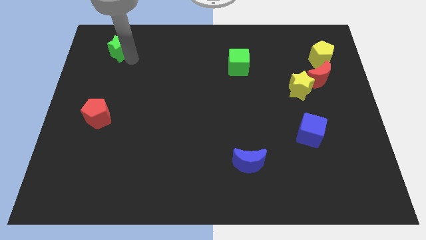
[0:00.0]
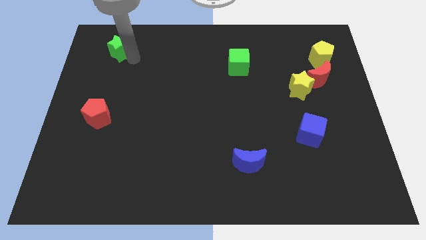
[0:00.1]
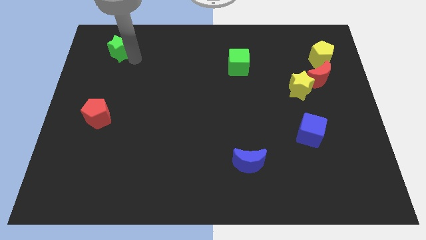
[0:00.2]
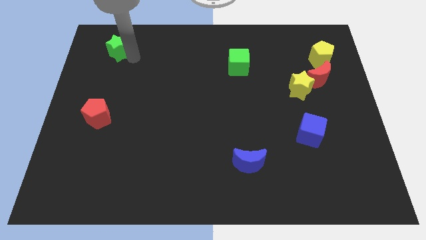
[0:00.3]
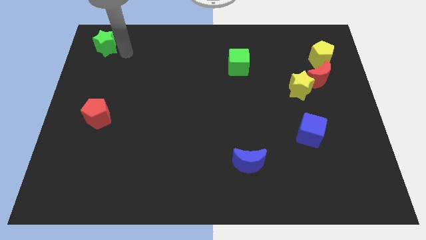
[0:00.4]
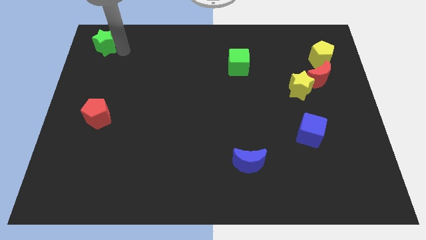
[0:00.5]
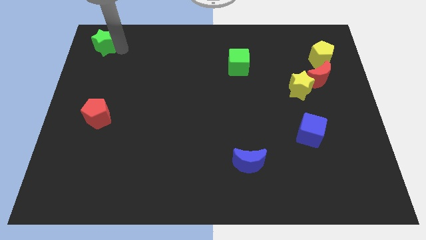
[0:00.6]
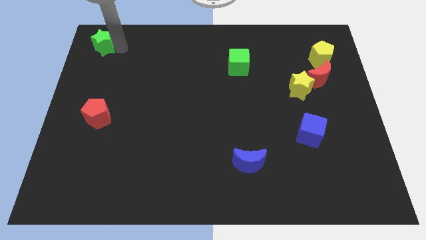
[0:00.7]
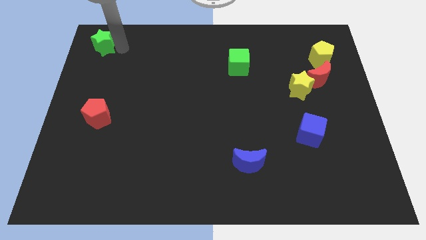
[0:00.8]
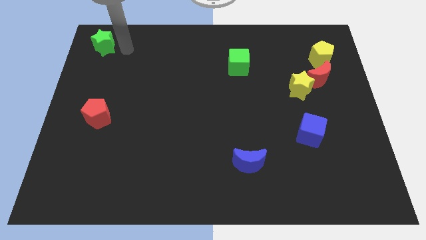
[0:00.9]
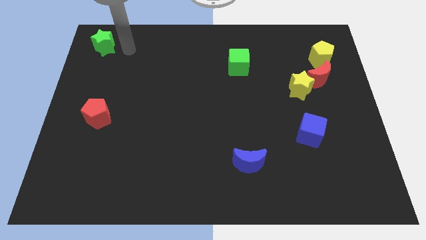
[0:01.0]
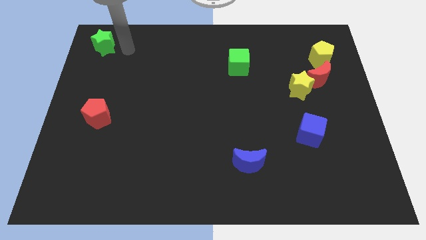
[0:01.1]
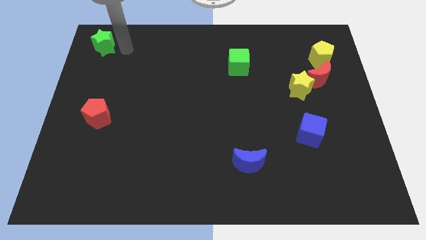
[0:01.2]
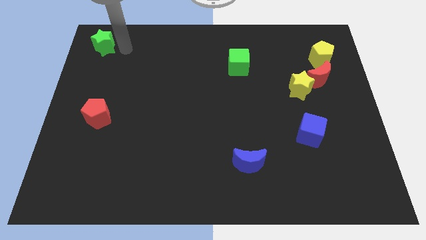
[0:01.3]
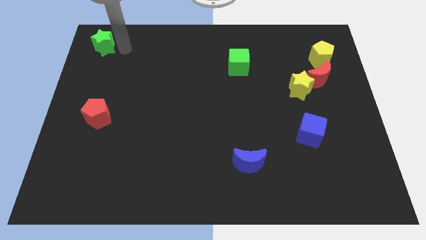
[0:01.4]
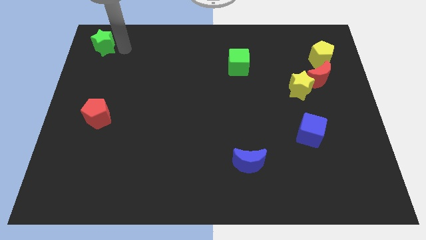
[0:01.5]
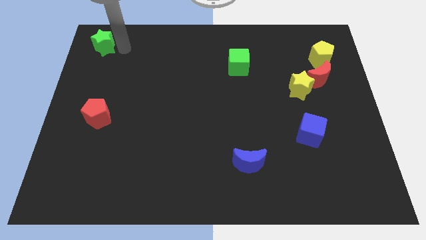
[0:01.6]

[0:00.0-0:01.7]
push the green star towards the left top of the board

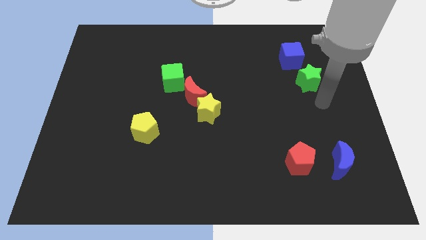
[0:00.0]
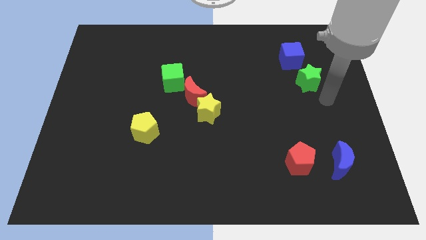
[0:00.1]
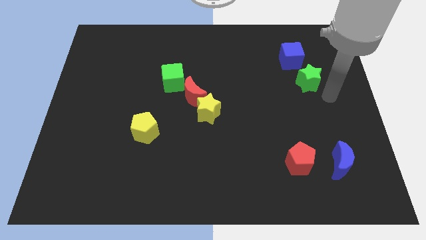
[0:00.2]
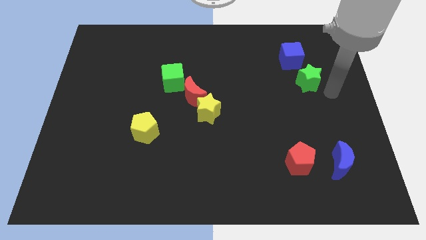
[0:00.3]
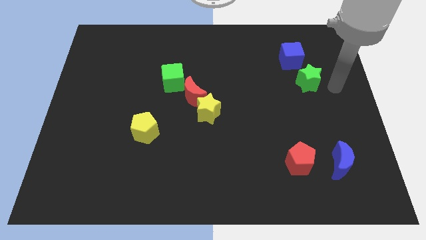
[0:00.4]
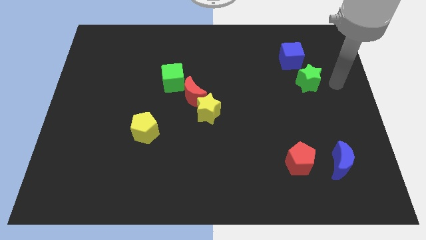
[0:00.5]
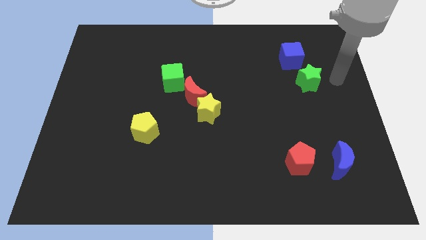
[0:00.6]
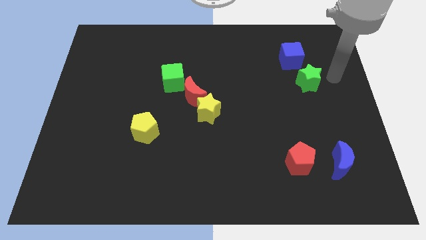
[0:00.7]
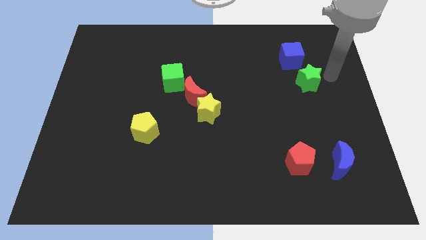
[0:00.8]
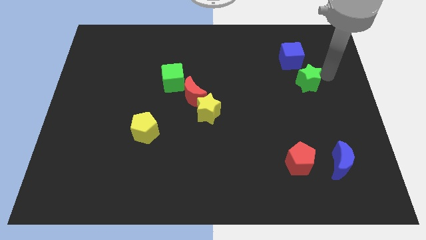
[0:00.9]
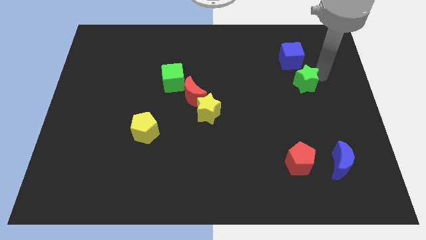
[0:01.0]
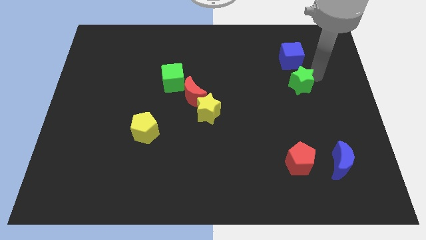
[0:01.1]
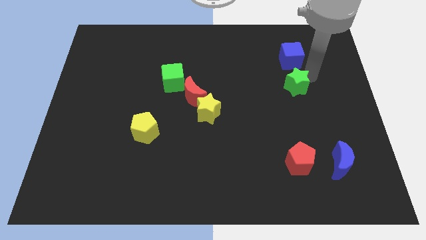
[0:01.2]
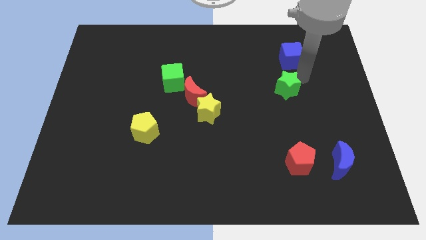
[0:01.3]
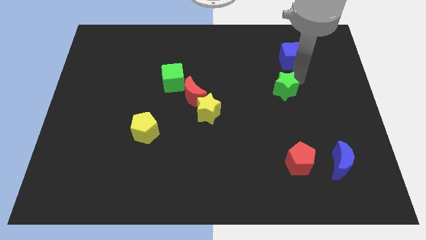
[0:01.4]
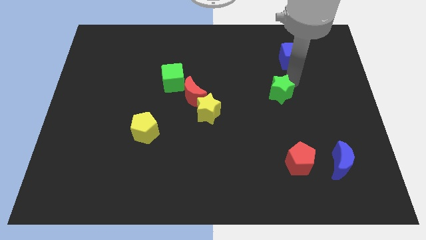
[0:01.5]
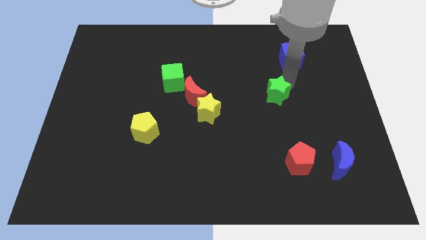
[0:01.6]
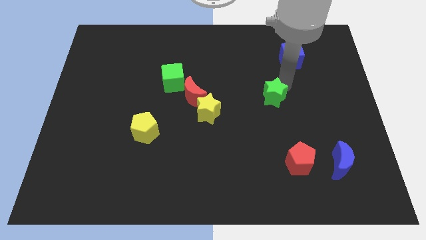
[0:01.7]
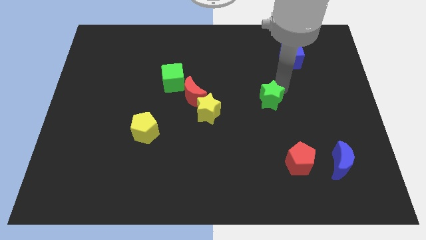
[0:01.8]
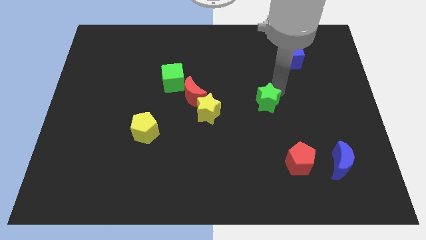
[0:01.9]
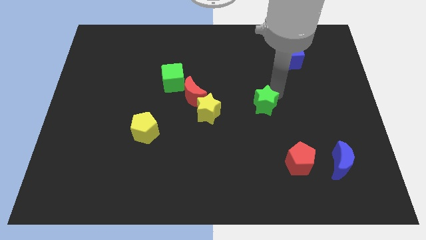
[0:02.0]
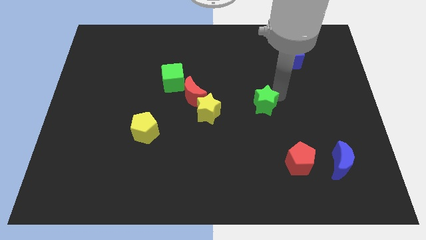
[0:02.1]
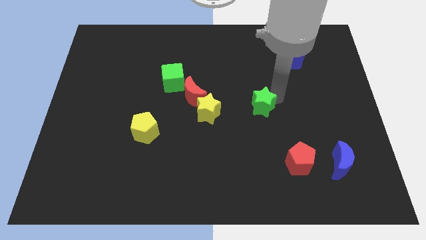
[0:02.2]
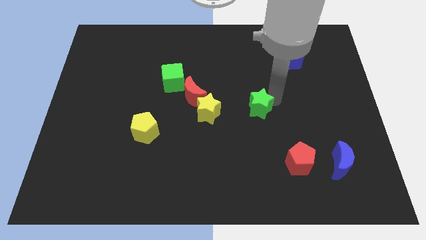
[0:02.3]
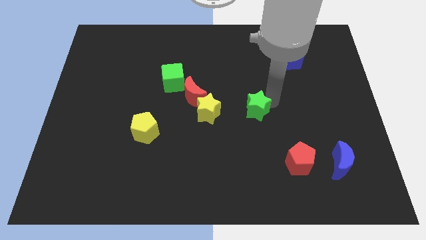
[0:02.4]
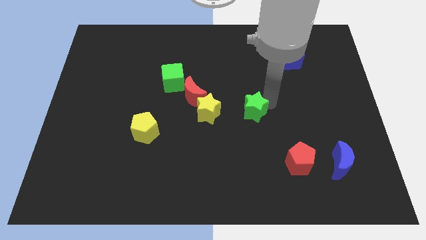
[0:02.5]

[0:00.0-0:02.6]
move the green star towards the center of the board

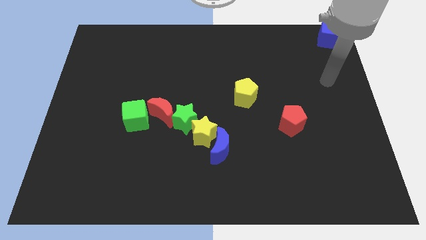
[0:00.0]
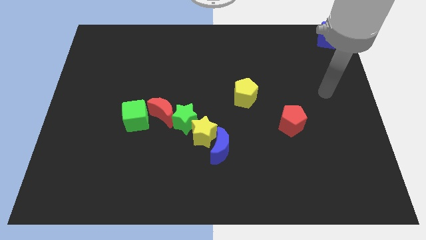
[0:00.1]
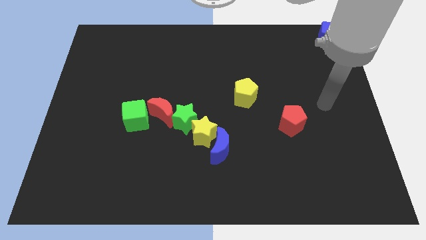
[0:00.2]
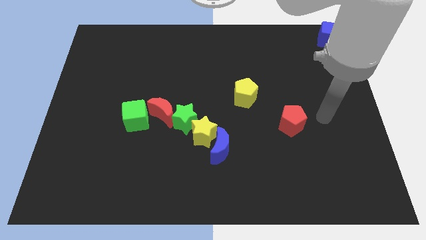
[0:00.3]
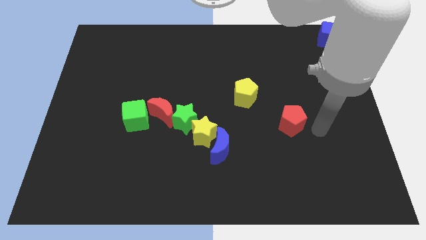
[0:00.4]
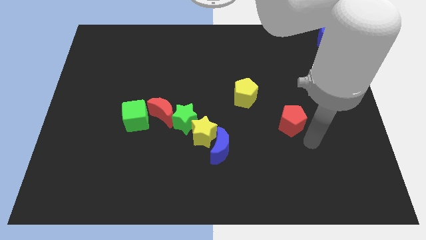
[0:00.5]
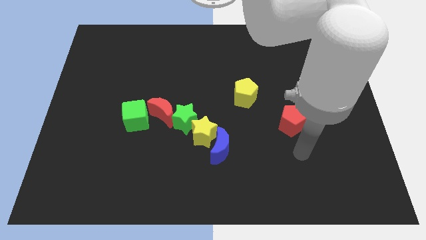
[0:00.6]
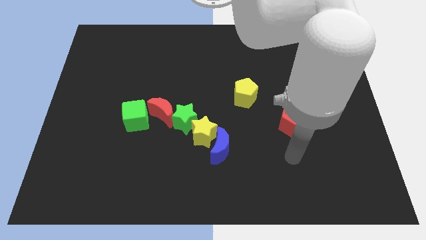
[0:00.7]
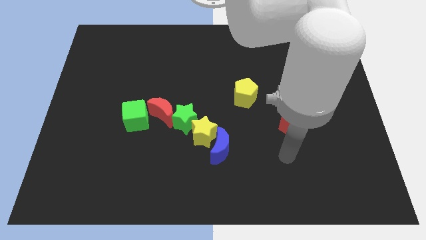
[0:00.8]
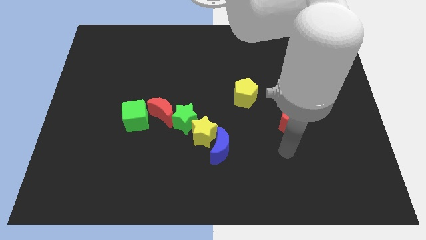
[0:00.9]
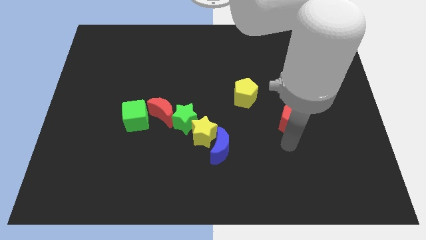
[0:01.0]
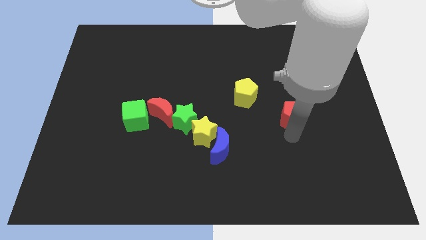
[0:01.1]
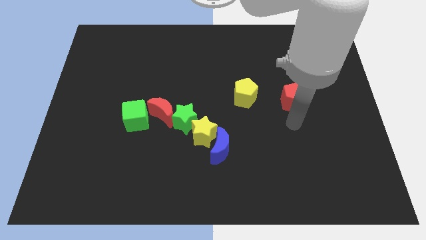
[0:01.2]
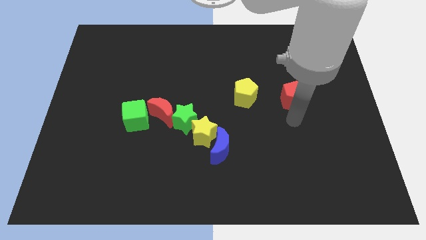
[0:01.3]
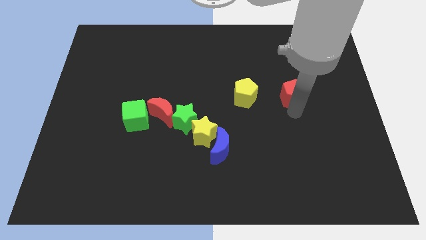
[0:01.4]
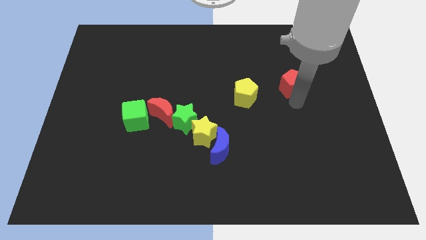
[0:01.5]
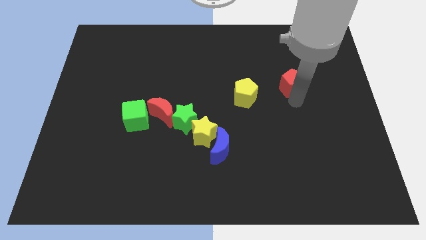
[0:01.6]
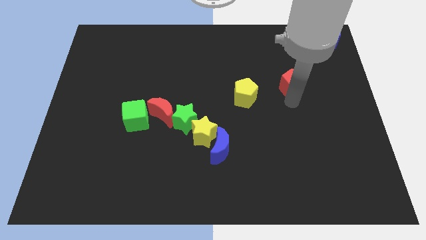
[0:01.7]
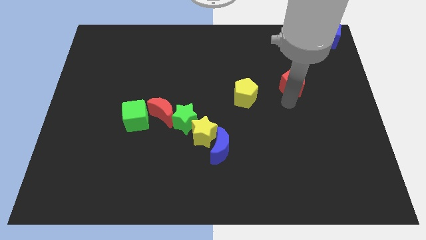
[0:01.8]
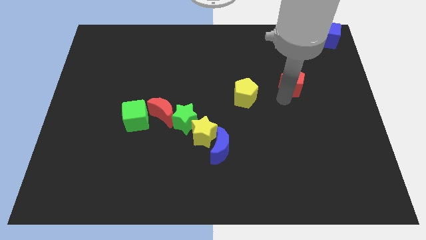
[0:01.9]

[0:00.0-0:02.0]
push the red pentagon towards the top

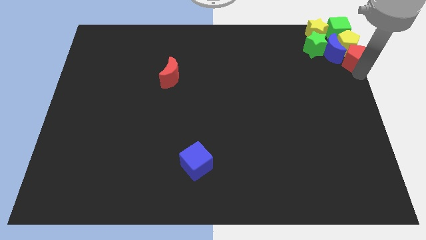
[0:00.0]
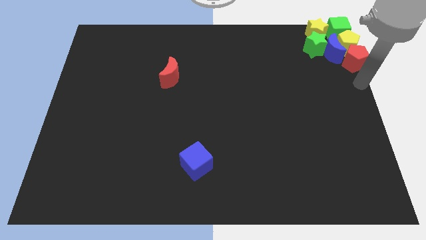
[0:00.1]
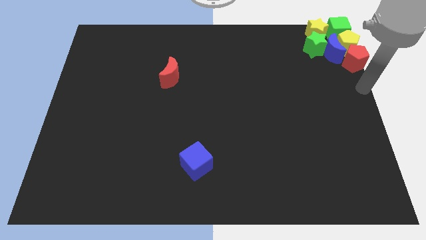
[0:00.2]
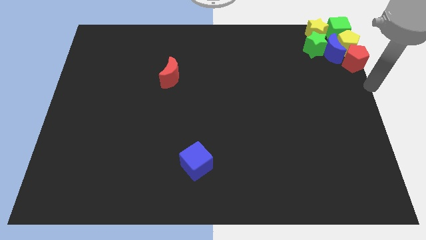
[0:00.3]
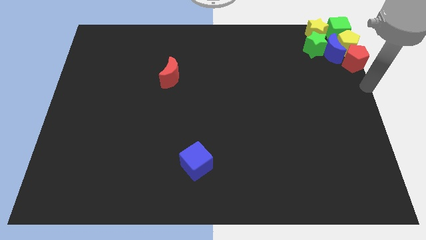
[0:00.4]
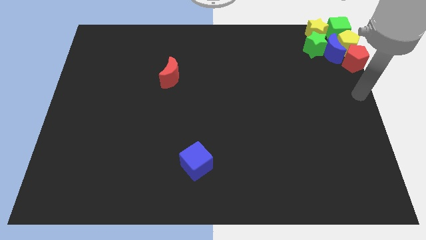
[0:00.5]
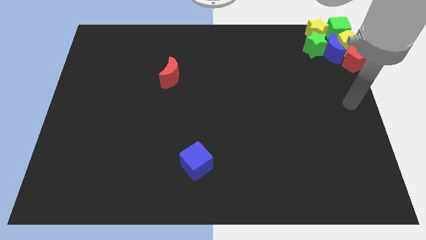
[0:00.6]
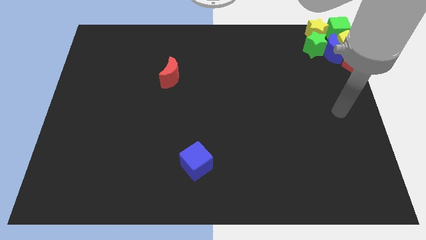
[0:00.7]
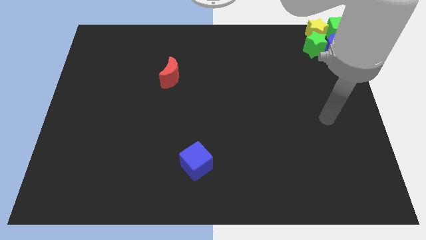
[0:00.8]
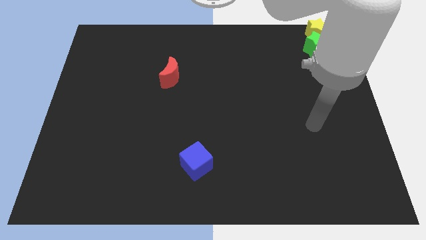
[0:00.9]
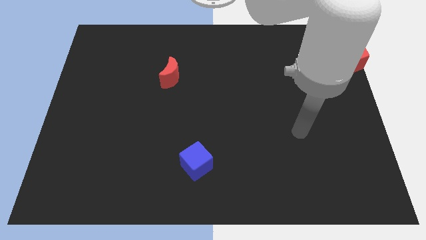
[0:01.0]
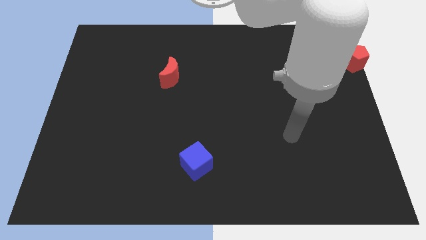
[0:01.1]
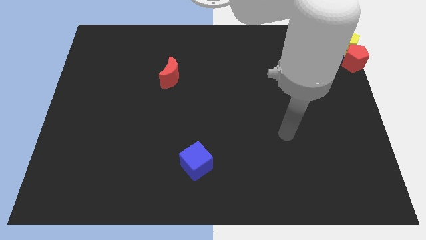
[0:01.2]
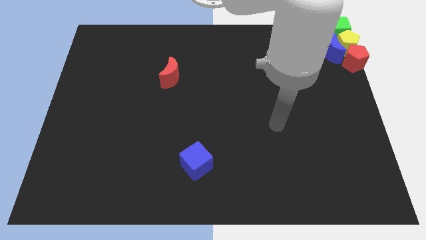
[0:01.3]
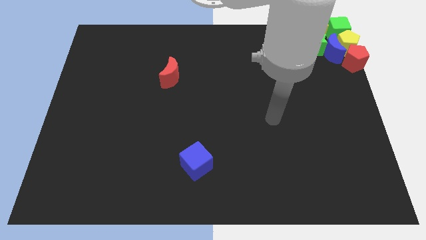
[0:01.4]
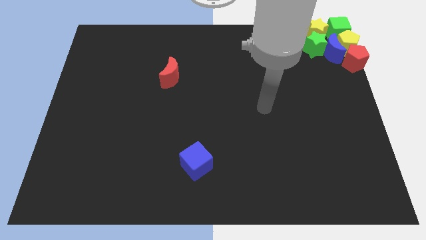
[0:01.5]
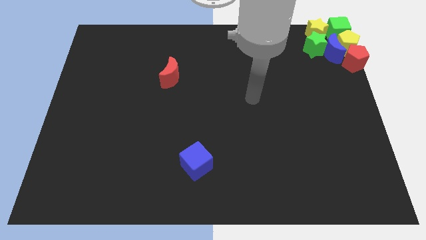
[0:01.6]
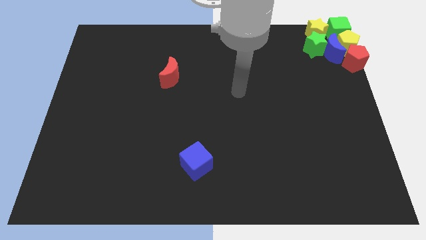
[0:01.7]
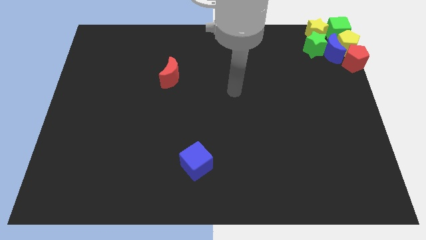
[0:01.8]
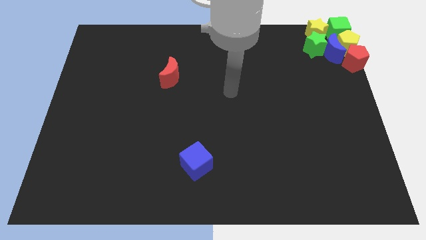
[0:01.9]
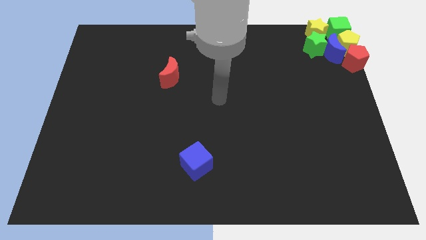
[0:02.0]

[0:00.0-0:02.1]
take your arm away from the red pentagon

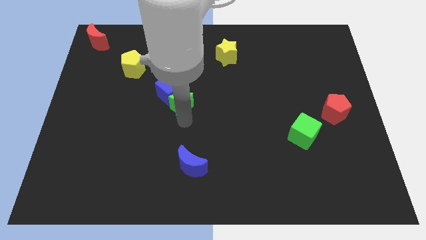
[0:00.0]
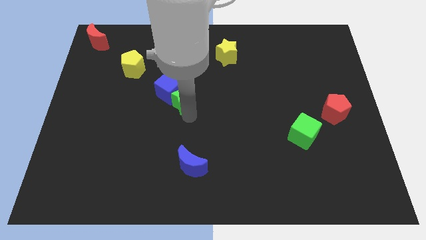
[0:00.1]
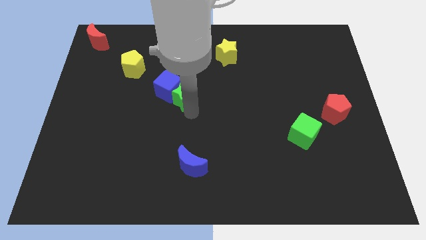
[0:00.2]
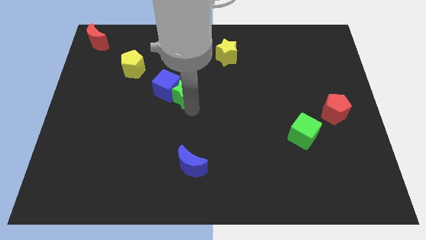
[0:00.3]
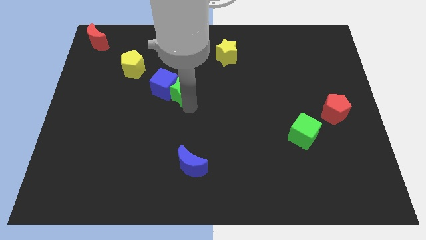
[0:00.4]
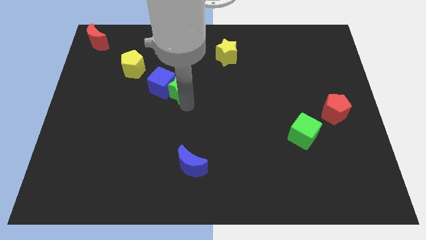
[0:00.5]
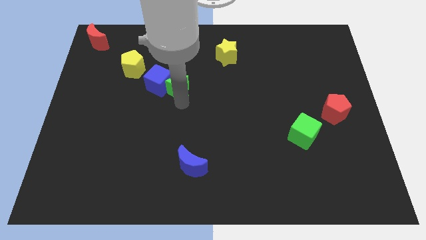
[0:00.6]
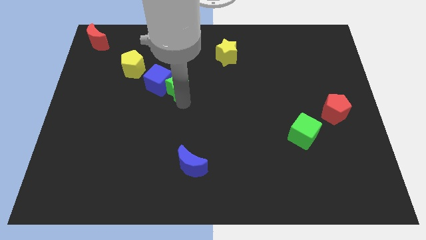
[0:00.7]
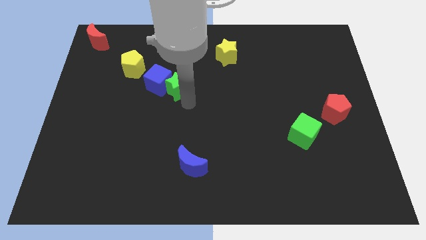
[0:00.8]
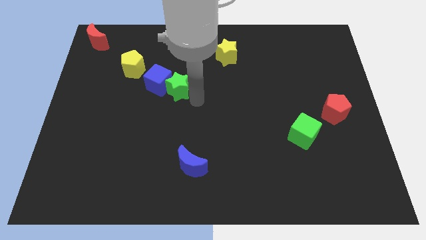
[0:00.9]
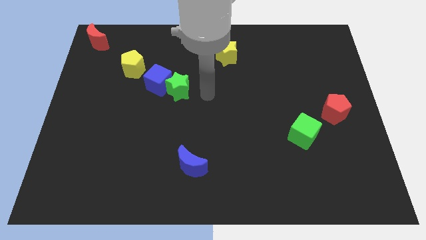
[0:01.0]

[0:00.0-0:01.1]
move the green star and the blue cube to the yellow pentagon
